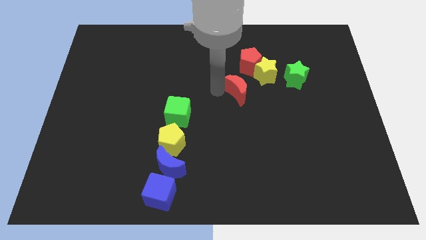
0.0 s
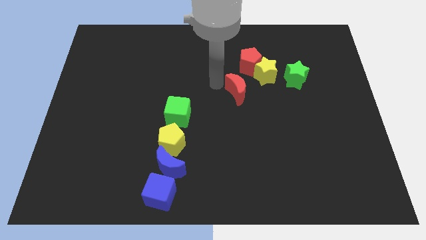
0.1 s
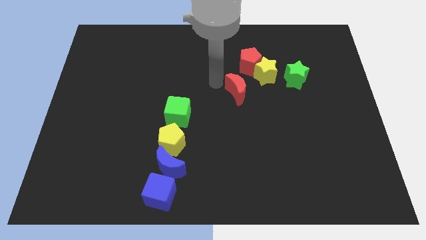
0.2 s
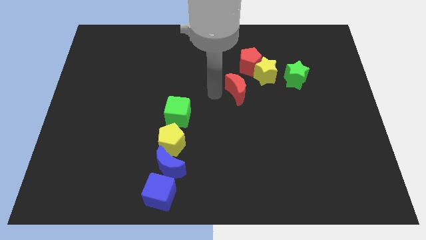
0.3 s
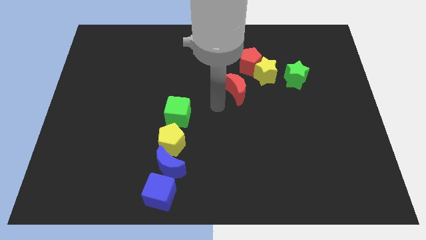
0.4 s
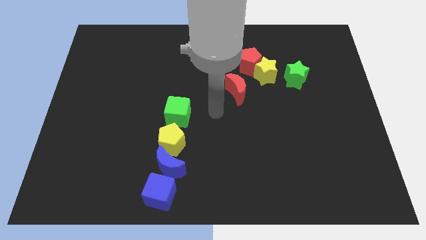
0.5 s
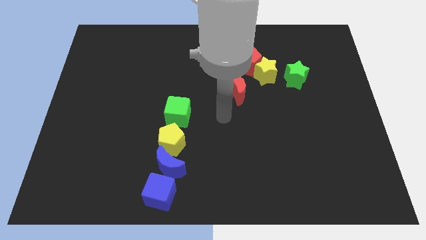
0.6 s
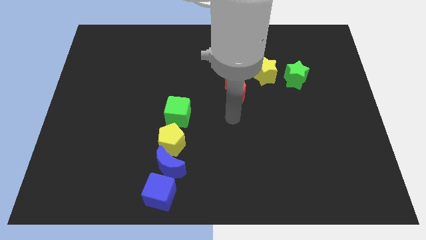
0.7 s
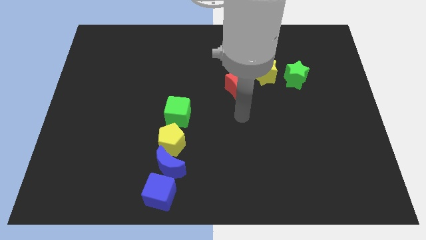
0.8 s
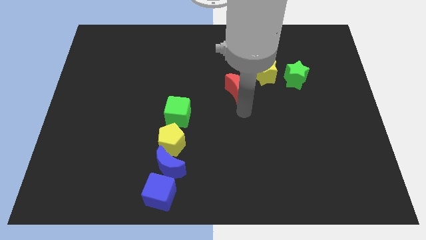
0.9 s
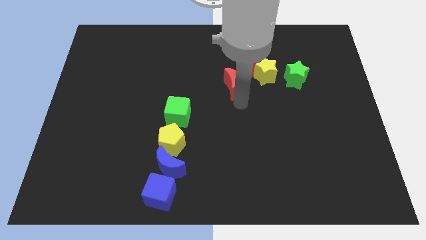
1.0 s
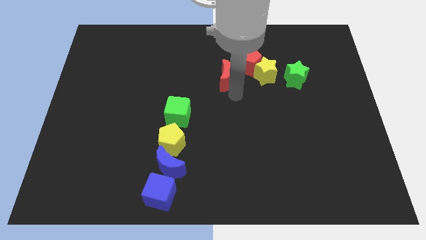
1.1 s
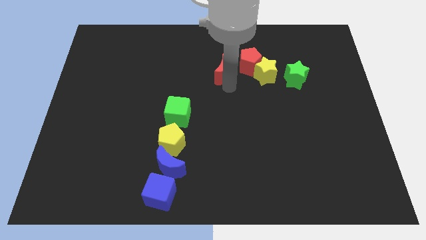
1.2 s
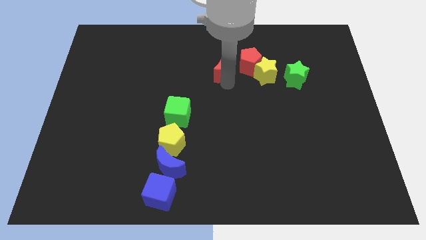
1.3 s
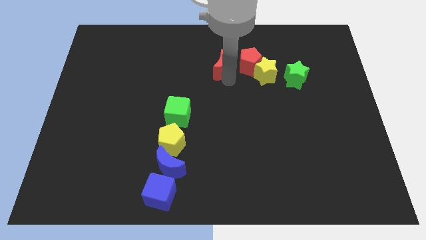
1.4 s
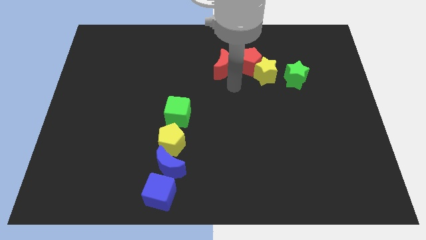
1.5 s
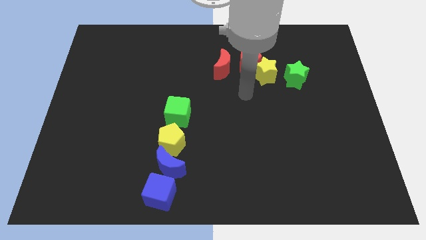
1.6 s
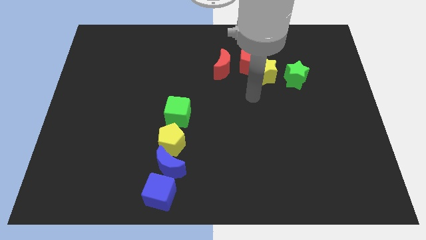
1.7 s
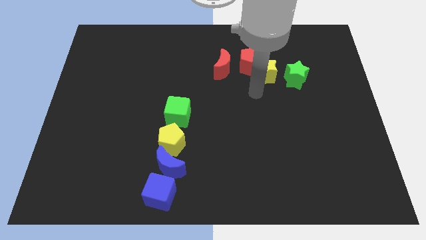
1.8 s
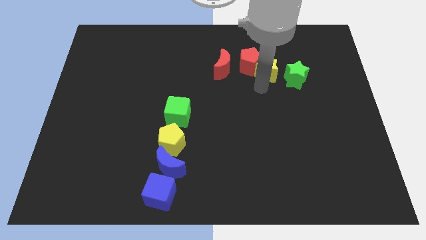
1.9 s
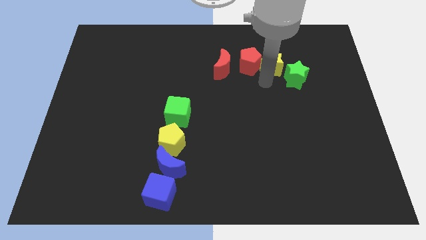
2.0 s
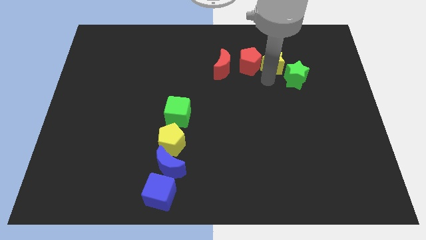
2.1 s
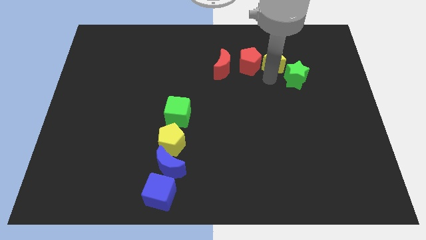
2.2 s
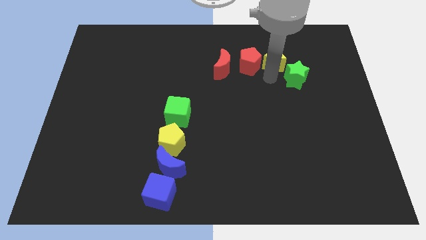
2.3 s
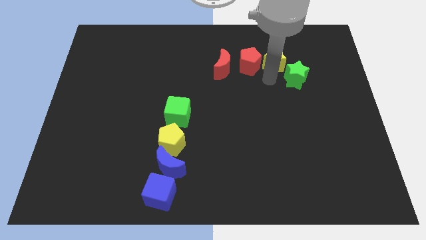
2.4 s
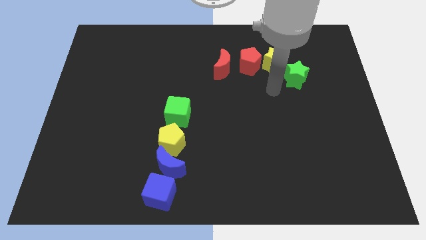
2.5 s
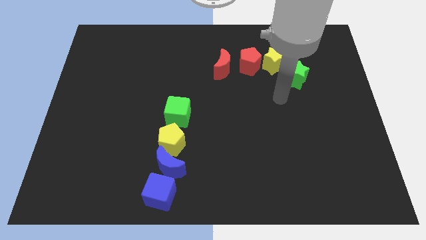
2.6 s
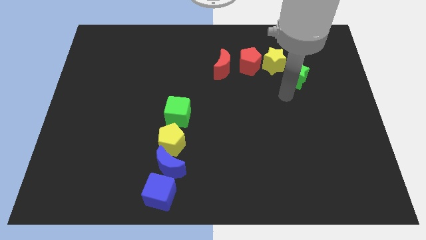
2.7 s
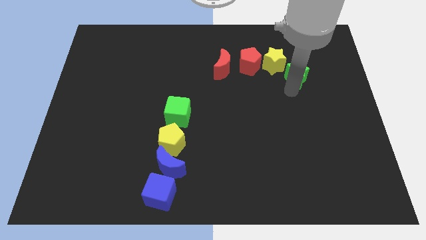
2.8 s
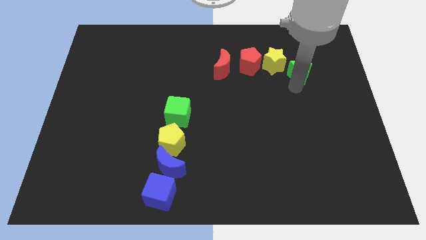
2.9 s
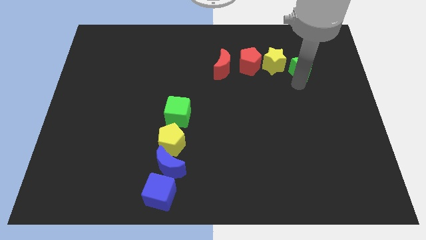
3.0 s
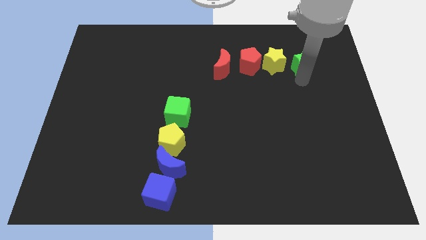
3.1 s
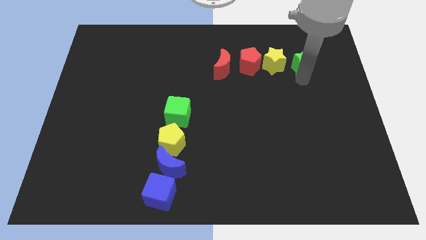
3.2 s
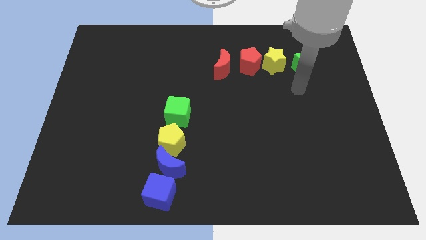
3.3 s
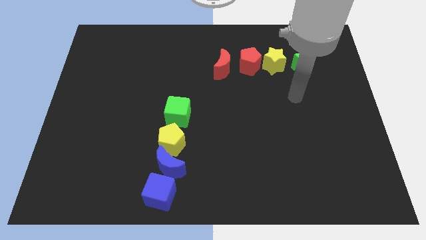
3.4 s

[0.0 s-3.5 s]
adjust red crescent and stars to form a horizontal line with red pentagon

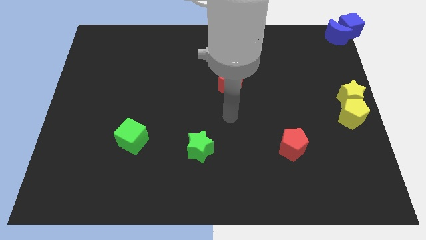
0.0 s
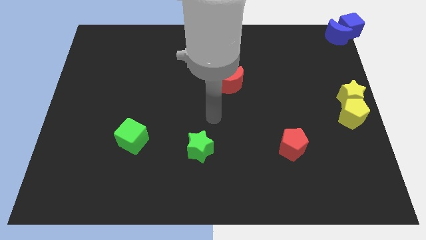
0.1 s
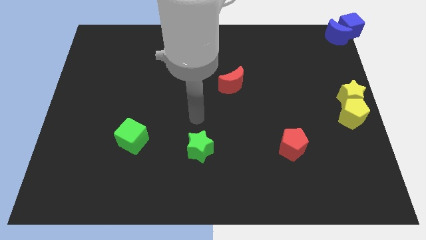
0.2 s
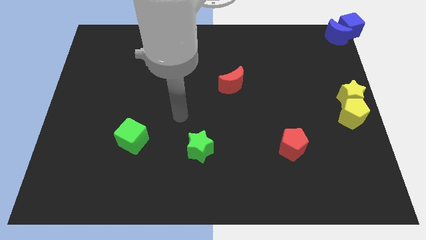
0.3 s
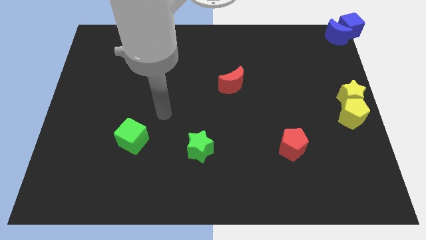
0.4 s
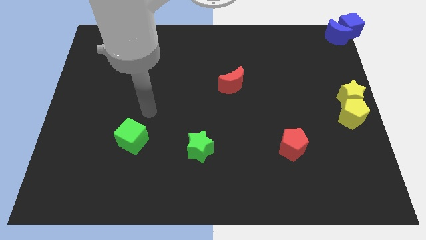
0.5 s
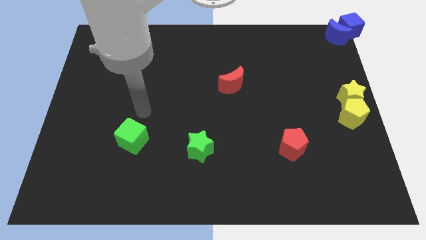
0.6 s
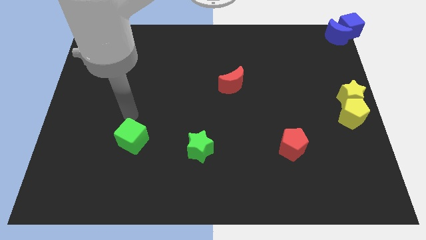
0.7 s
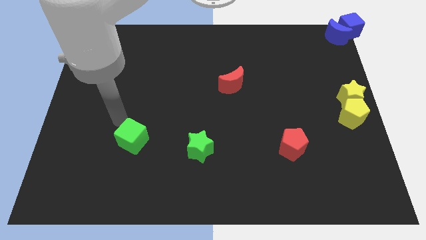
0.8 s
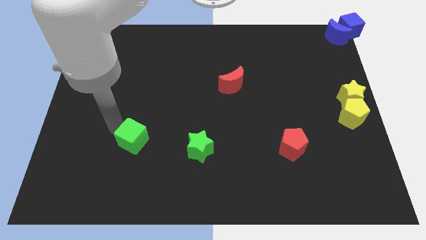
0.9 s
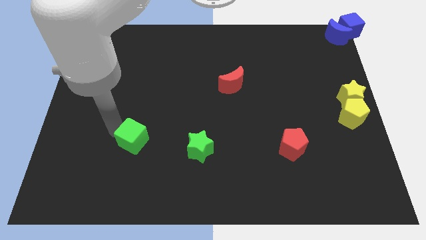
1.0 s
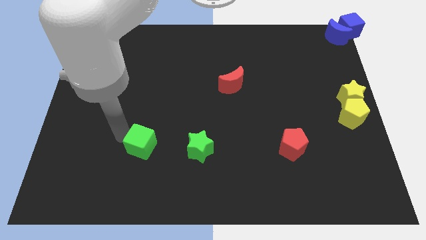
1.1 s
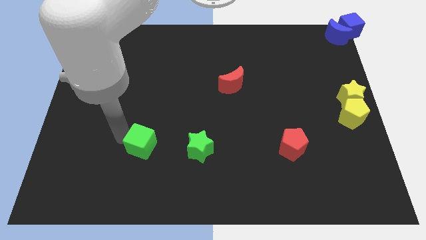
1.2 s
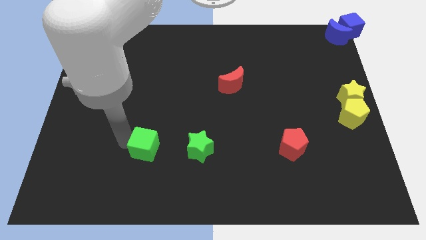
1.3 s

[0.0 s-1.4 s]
place the green cube parallel to green star

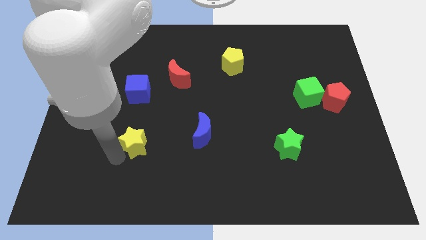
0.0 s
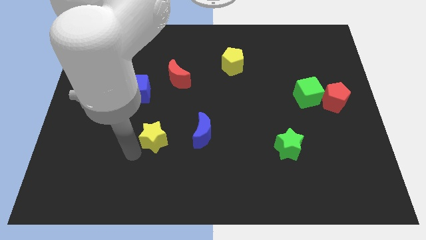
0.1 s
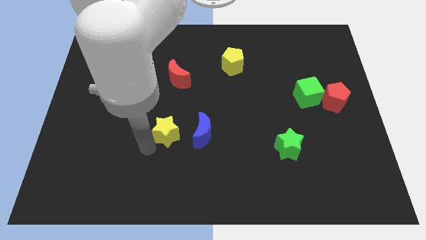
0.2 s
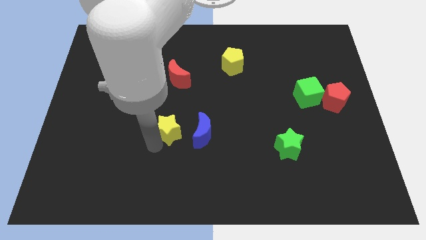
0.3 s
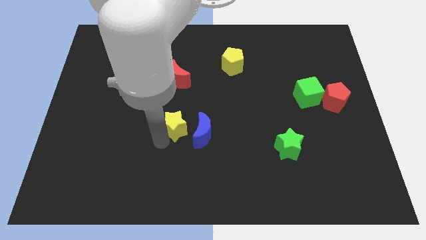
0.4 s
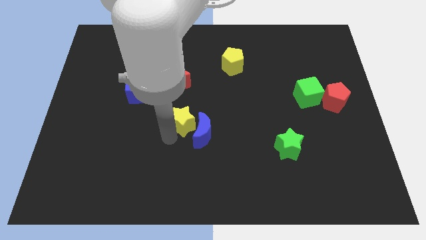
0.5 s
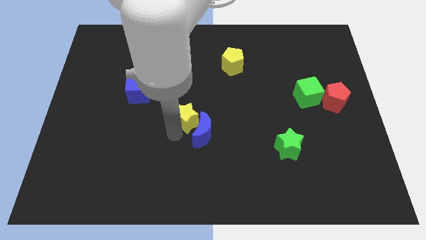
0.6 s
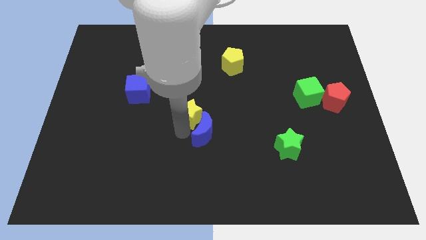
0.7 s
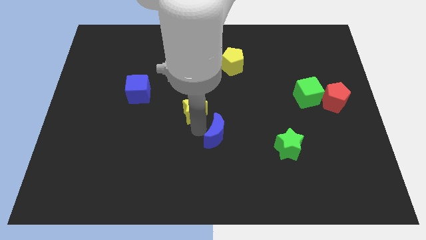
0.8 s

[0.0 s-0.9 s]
push the yellow star towards the center of the board

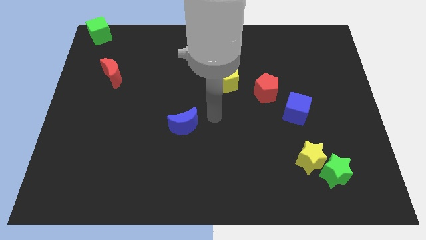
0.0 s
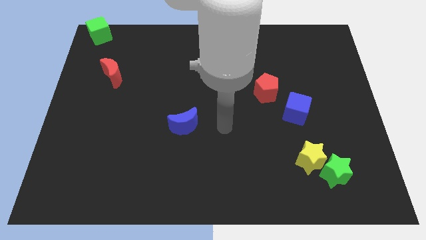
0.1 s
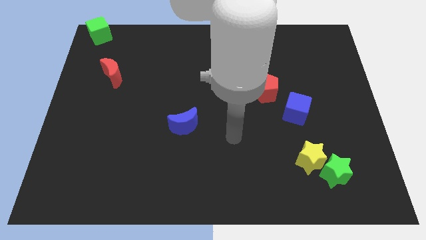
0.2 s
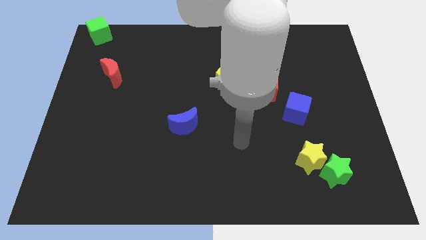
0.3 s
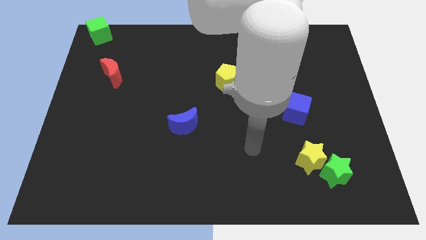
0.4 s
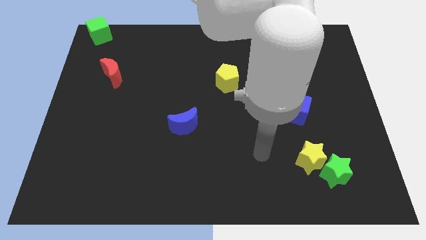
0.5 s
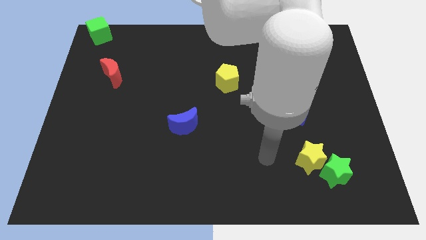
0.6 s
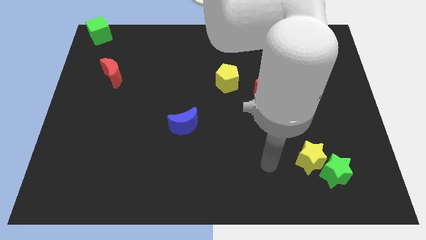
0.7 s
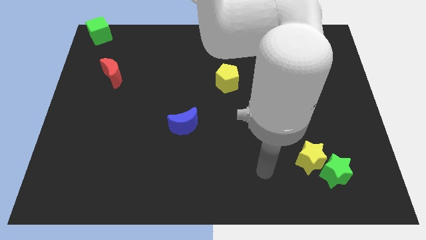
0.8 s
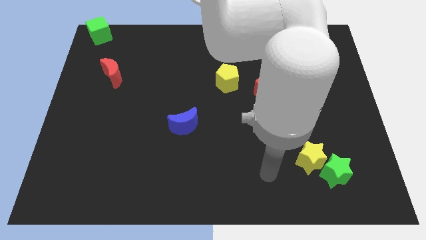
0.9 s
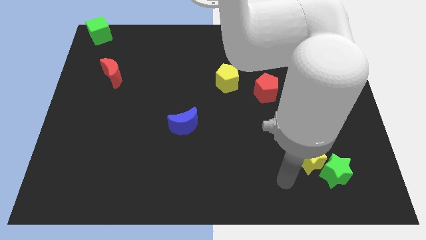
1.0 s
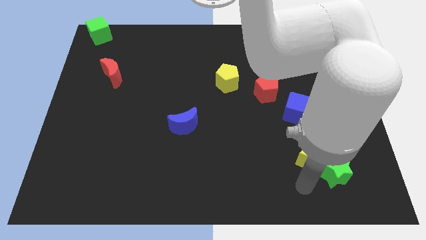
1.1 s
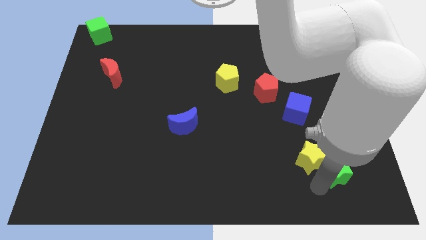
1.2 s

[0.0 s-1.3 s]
move the arm to the left of green star

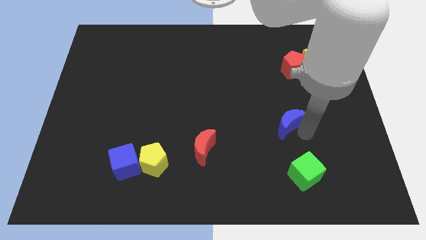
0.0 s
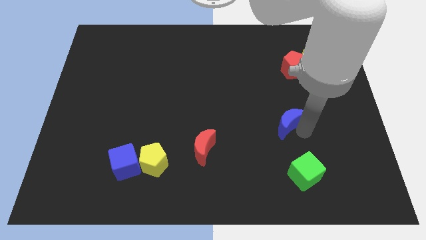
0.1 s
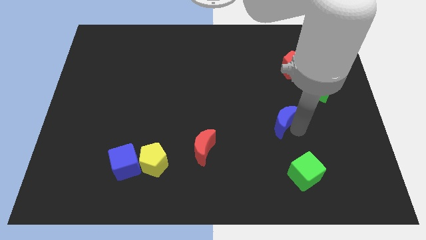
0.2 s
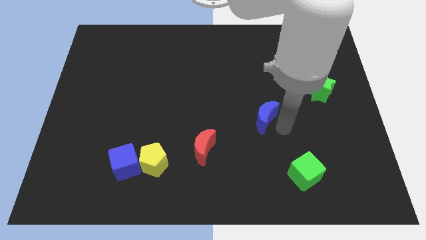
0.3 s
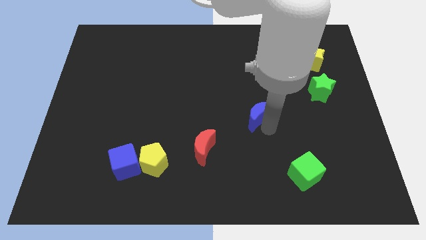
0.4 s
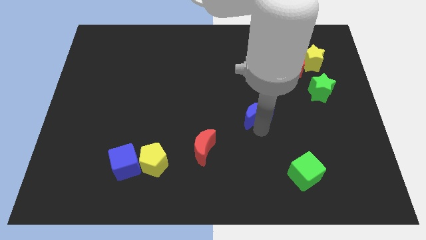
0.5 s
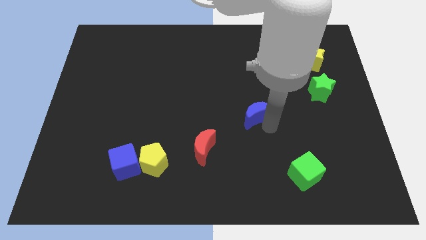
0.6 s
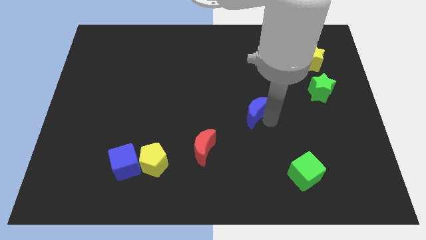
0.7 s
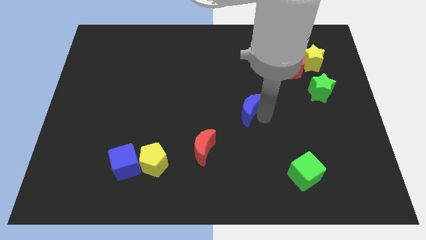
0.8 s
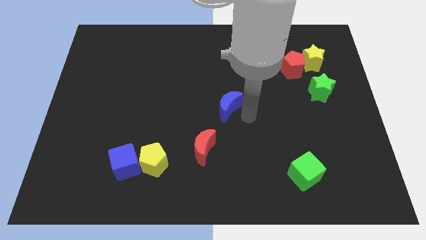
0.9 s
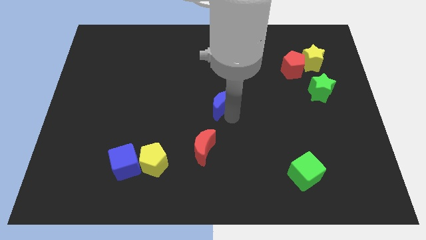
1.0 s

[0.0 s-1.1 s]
move blue moon towards center

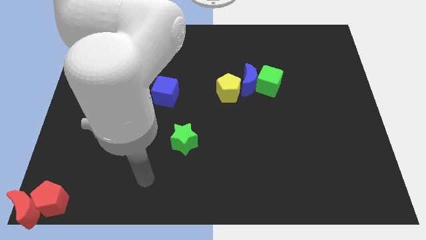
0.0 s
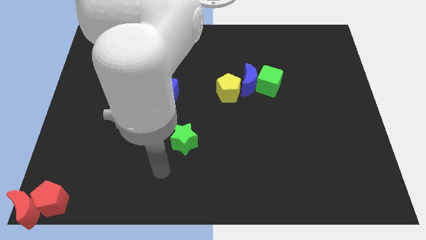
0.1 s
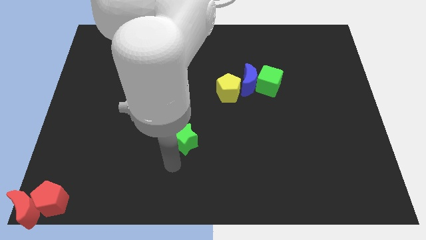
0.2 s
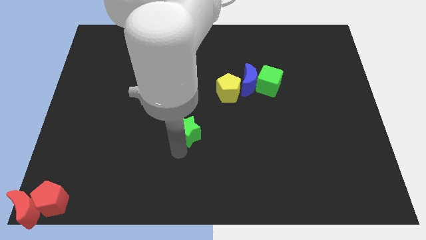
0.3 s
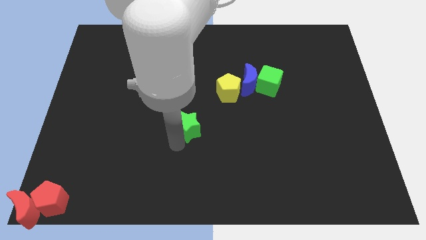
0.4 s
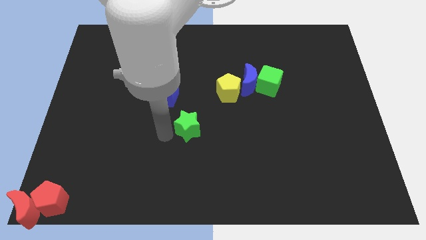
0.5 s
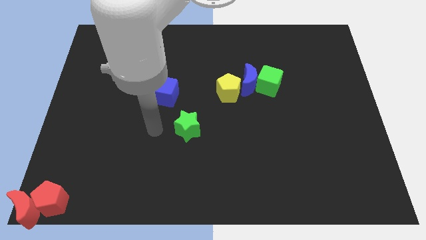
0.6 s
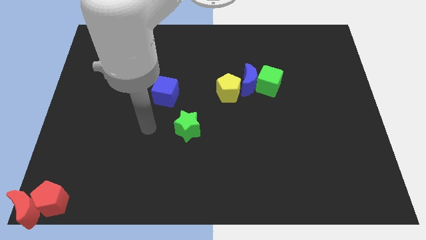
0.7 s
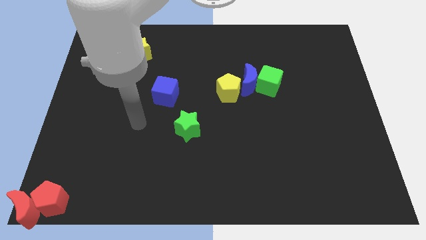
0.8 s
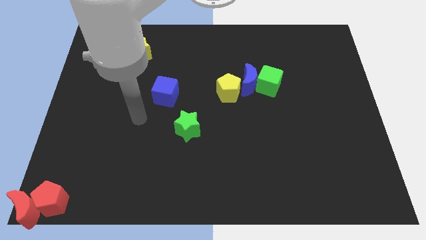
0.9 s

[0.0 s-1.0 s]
slightly push the green star to the center of the board
